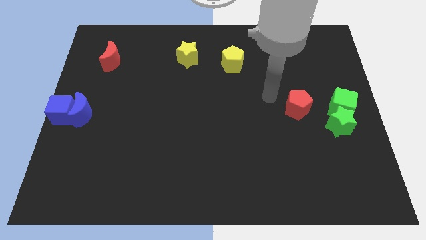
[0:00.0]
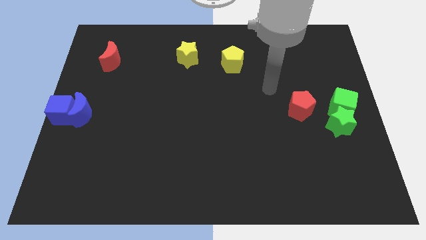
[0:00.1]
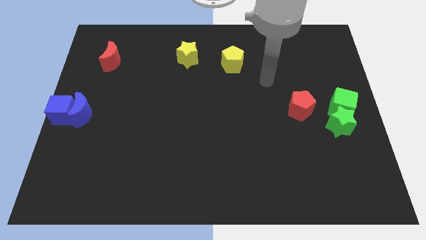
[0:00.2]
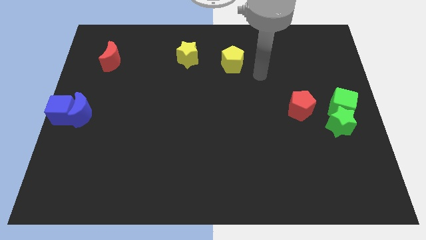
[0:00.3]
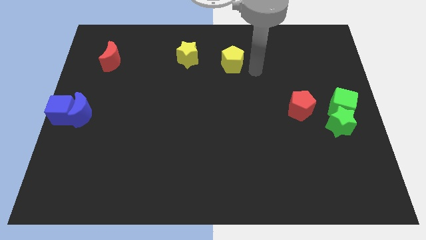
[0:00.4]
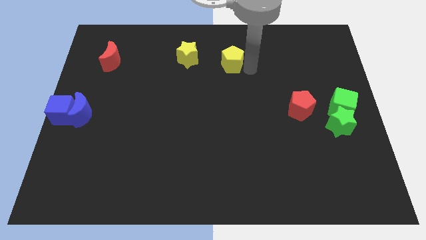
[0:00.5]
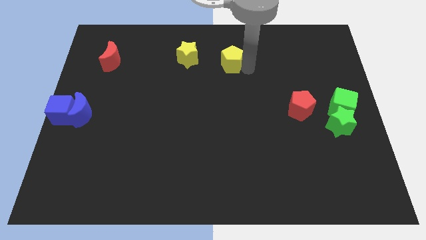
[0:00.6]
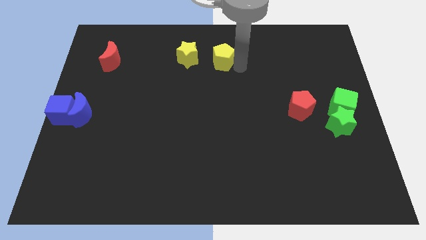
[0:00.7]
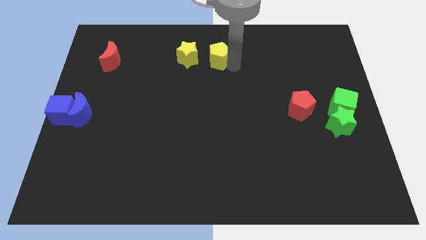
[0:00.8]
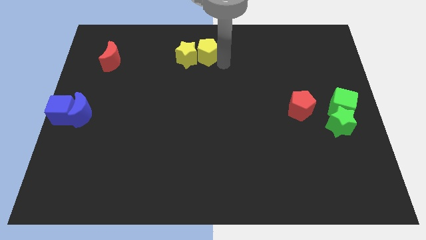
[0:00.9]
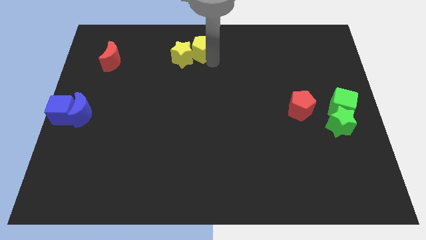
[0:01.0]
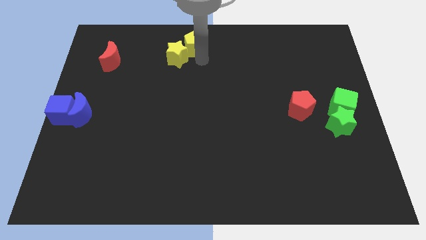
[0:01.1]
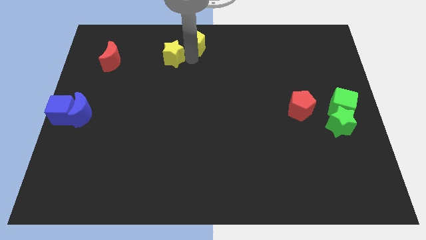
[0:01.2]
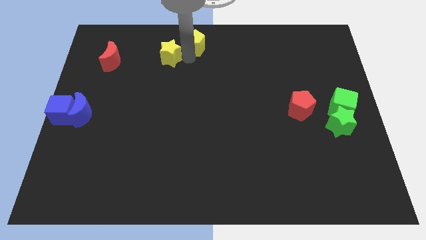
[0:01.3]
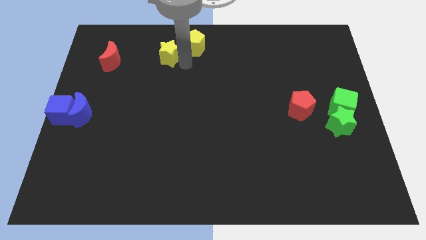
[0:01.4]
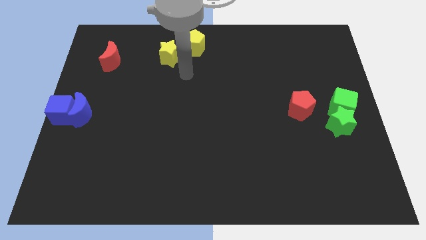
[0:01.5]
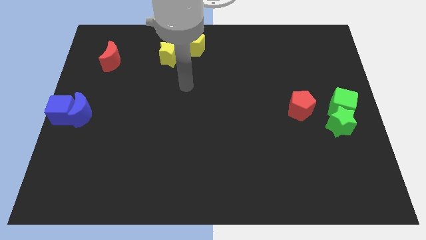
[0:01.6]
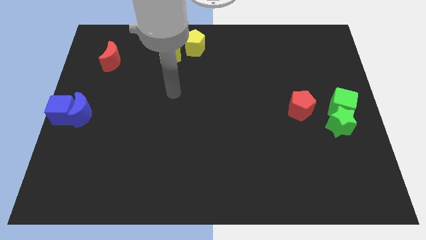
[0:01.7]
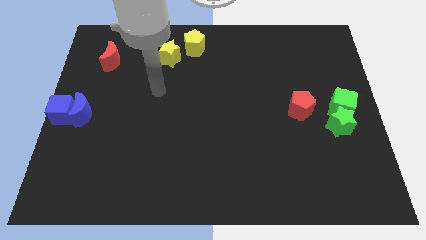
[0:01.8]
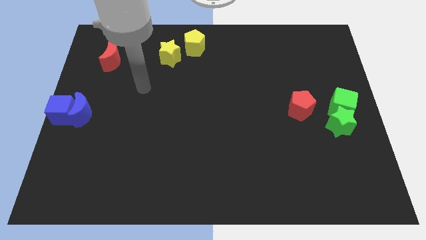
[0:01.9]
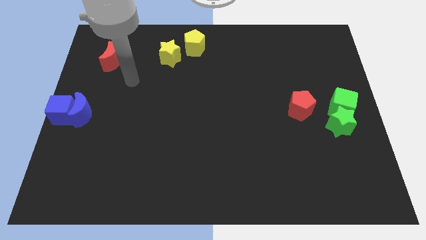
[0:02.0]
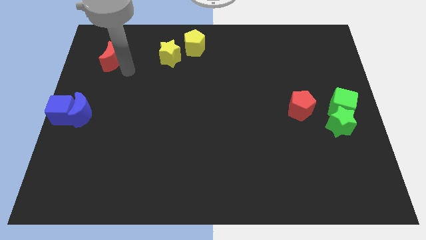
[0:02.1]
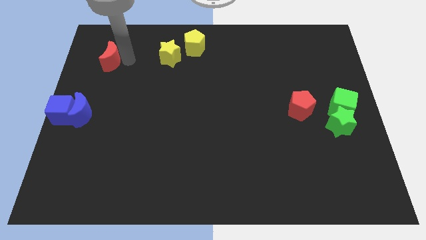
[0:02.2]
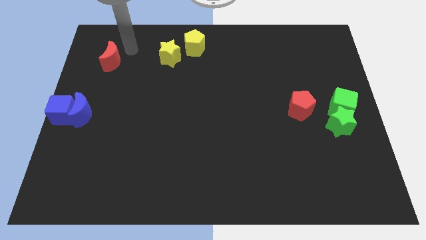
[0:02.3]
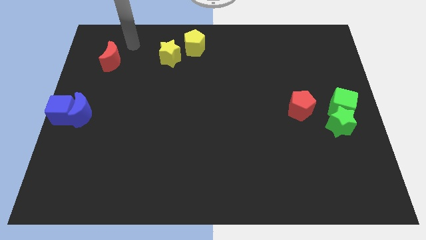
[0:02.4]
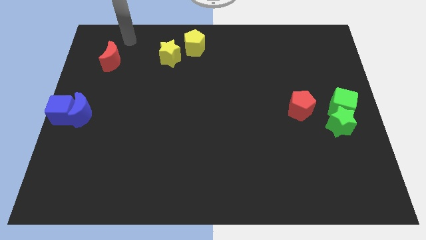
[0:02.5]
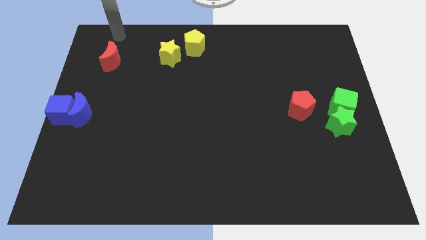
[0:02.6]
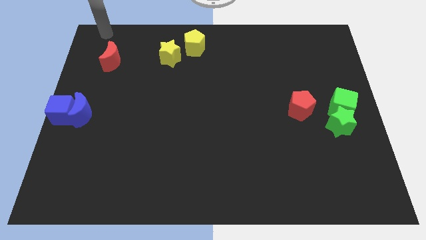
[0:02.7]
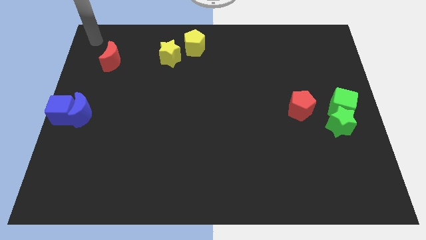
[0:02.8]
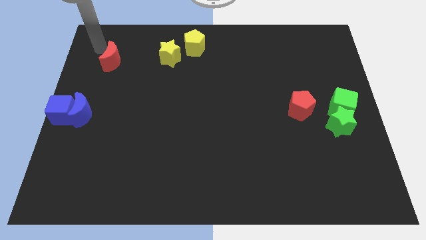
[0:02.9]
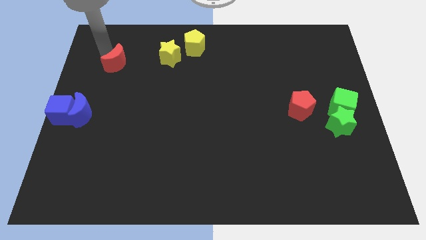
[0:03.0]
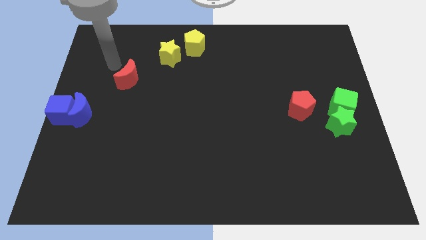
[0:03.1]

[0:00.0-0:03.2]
place the yellow star bottom left to the yellow pentagon

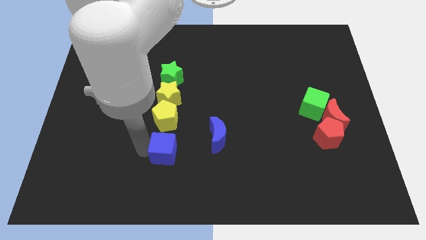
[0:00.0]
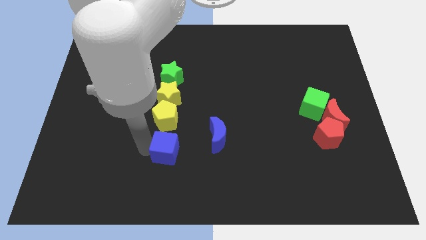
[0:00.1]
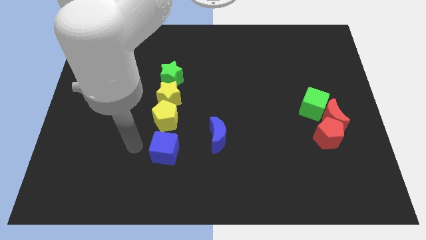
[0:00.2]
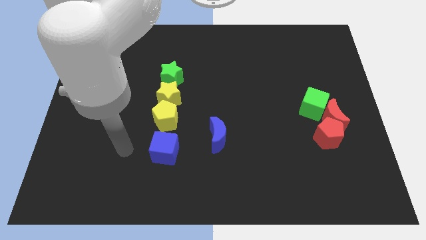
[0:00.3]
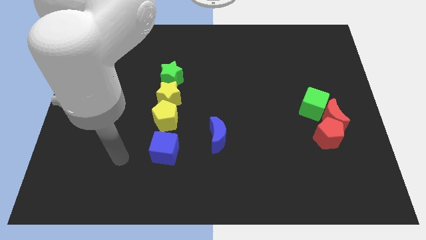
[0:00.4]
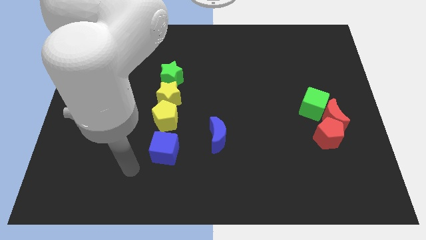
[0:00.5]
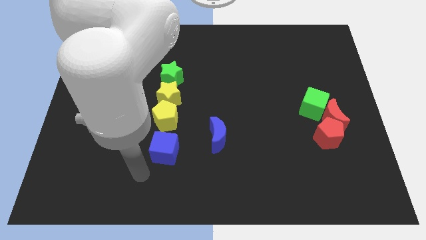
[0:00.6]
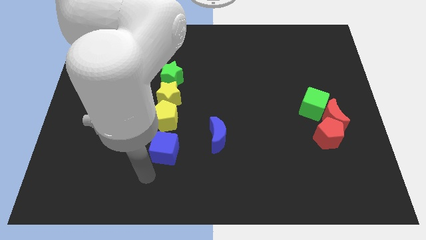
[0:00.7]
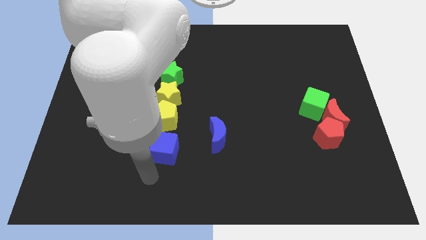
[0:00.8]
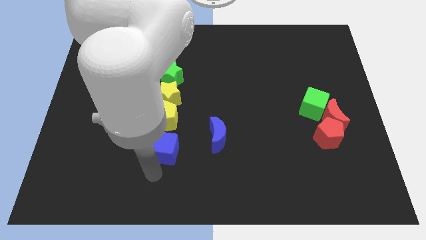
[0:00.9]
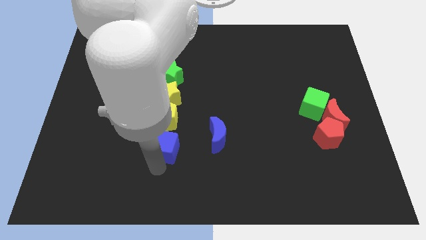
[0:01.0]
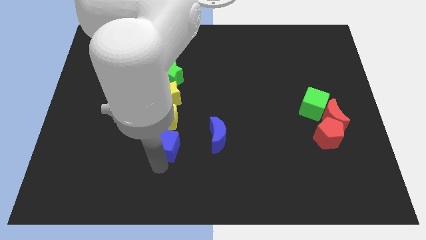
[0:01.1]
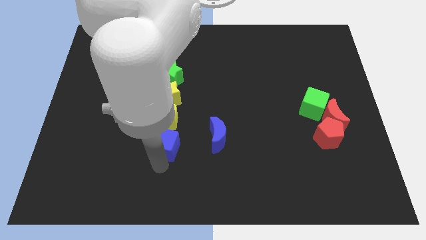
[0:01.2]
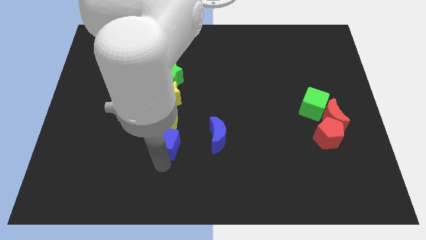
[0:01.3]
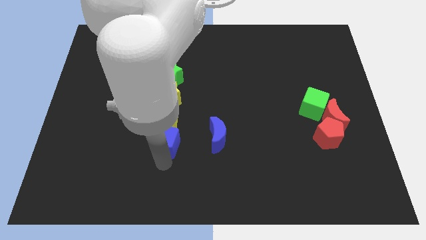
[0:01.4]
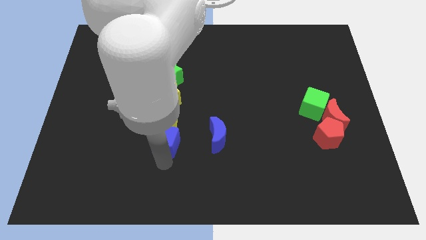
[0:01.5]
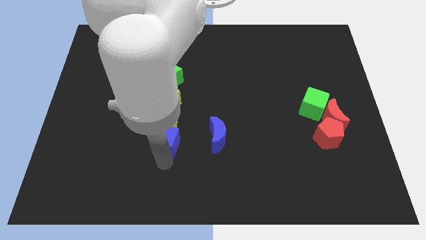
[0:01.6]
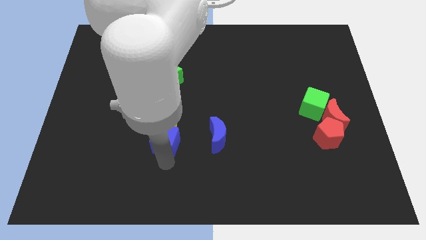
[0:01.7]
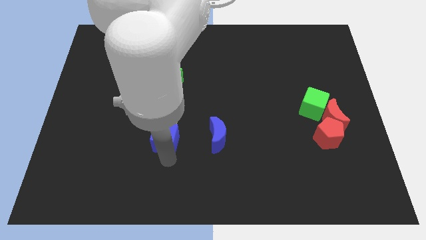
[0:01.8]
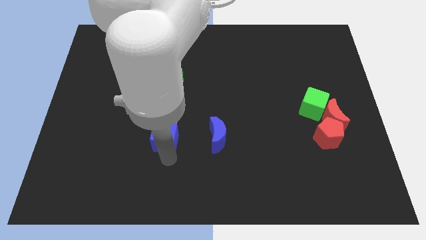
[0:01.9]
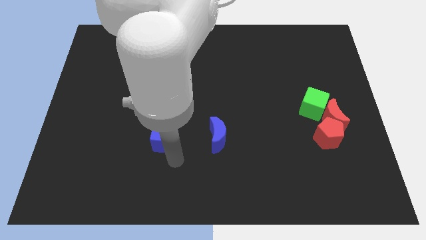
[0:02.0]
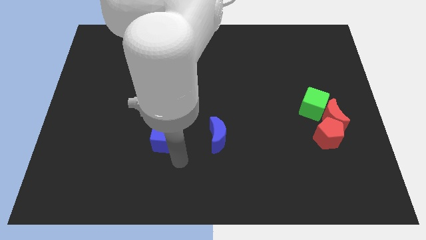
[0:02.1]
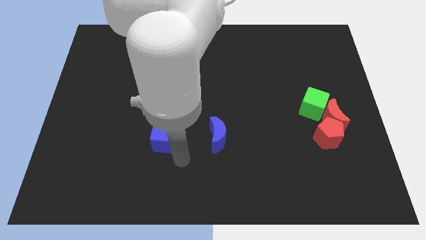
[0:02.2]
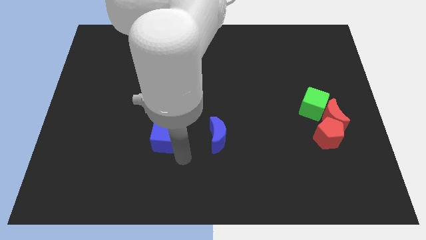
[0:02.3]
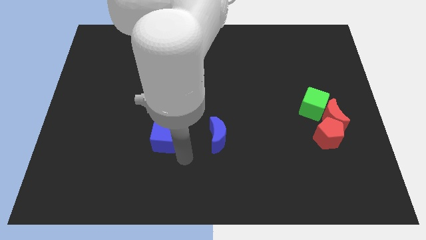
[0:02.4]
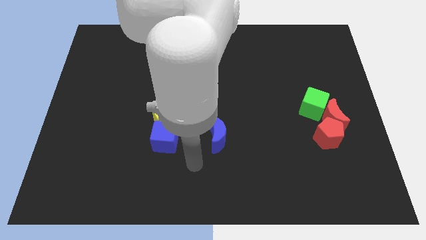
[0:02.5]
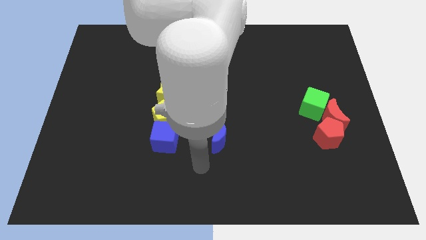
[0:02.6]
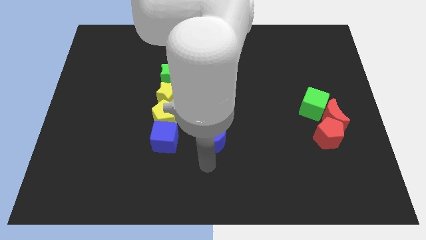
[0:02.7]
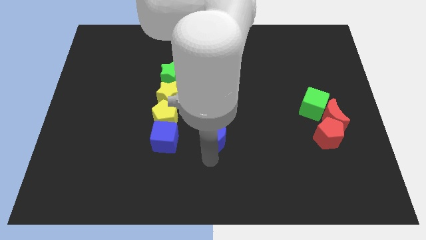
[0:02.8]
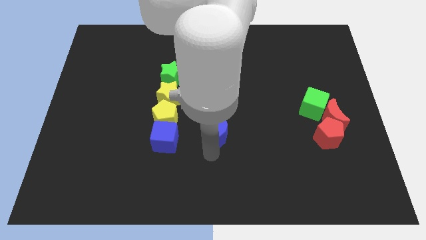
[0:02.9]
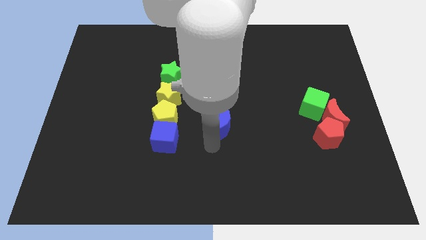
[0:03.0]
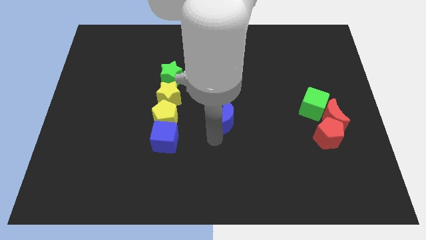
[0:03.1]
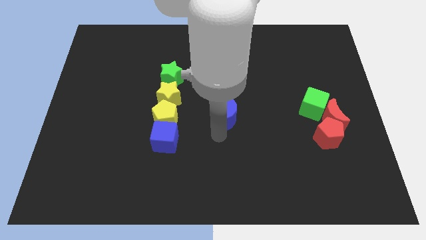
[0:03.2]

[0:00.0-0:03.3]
place the blue moon right to the yellow pentagon

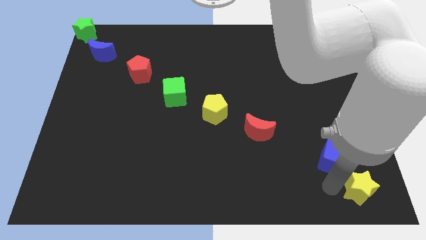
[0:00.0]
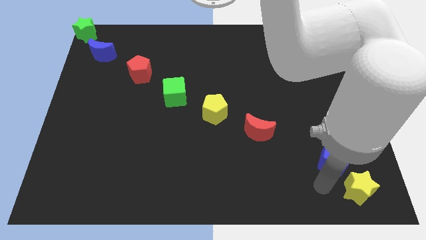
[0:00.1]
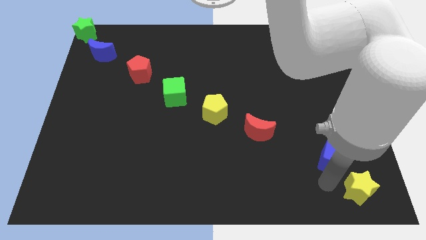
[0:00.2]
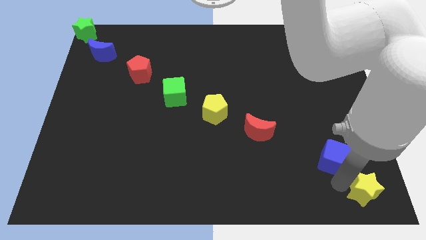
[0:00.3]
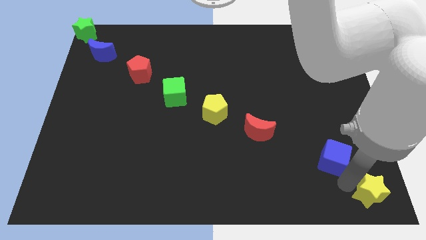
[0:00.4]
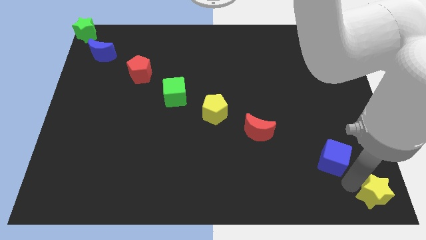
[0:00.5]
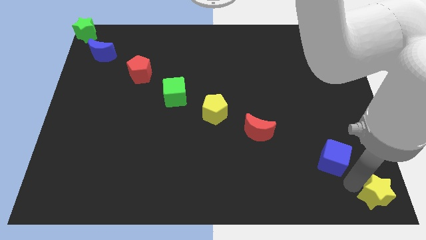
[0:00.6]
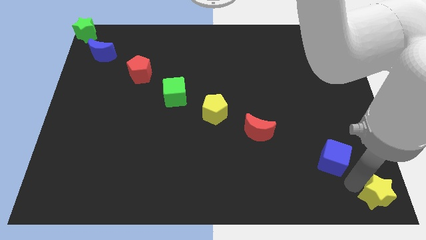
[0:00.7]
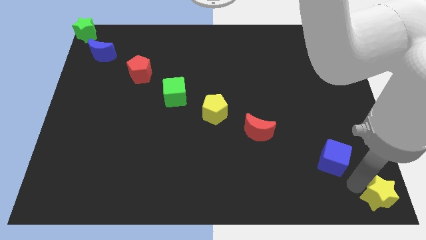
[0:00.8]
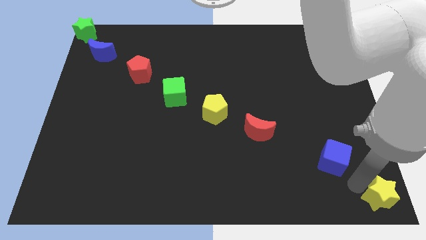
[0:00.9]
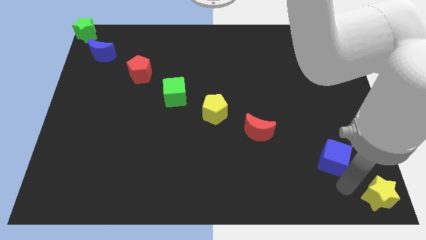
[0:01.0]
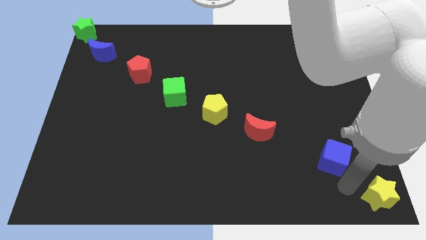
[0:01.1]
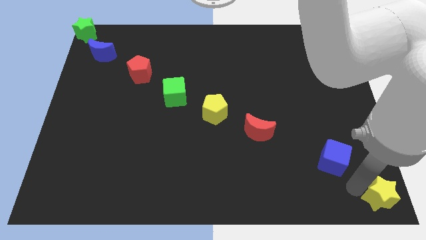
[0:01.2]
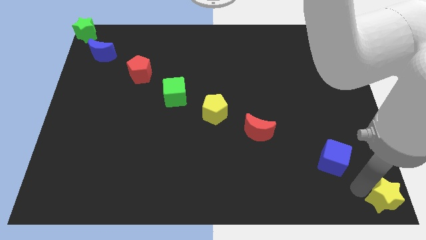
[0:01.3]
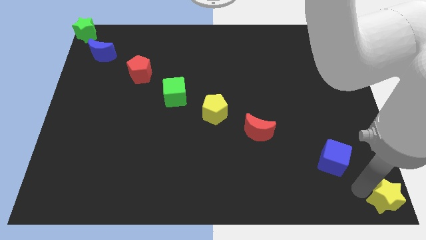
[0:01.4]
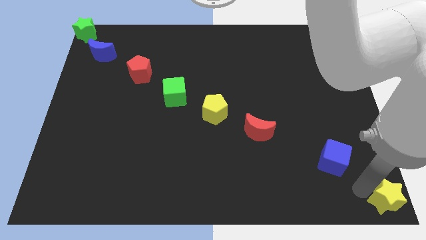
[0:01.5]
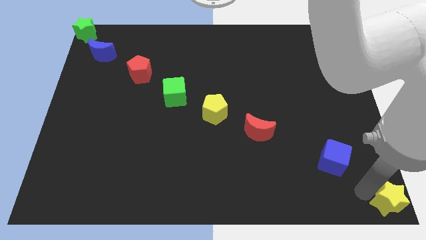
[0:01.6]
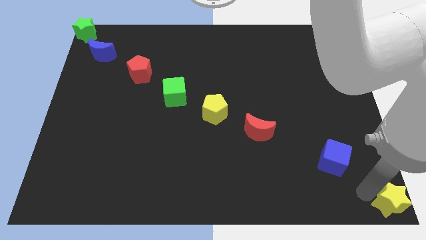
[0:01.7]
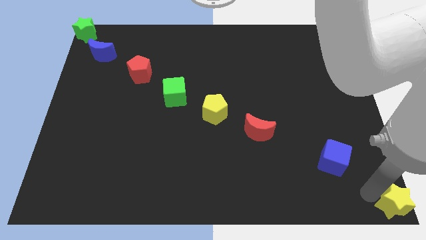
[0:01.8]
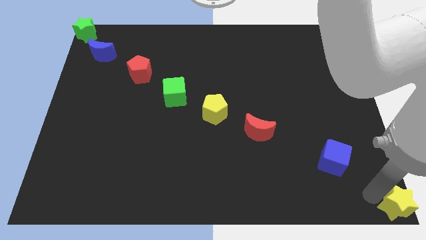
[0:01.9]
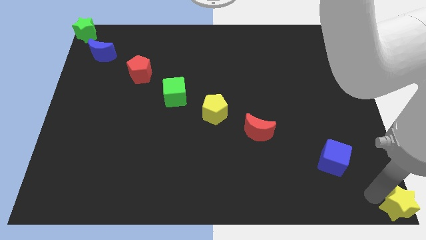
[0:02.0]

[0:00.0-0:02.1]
push the yellow star at the bottom corner
